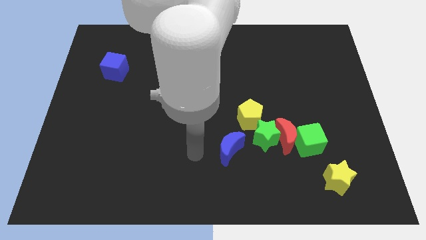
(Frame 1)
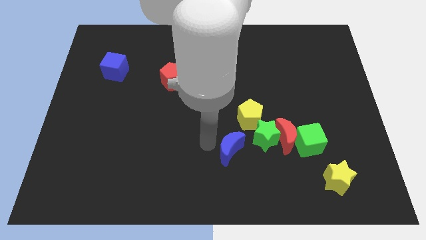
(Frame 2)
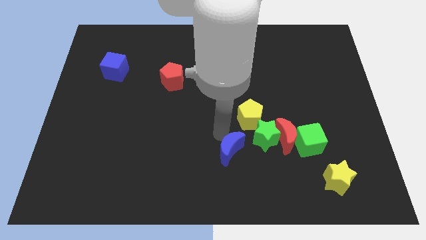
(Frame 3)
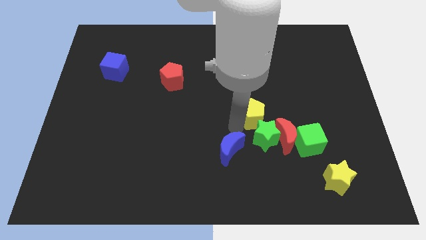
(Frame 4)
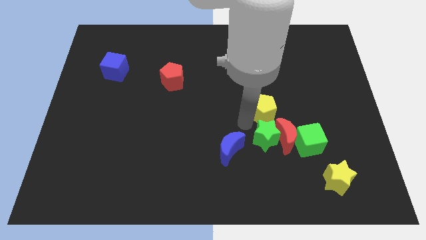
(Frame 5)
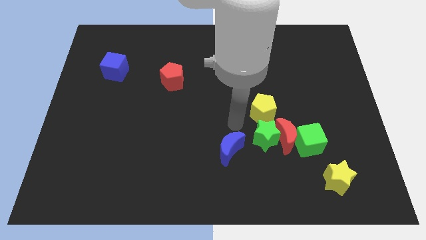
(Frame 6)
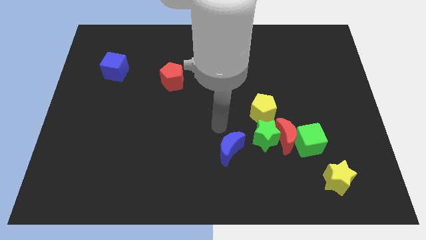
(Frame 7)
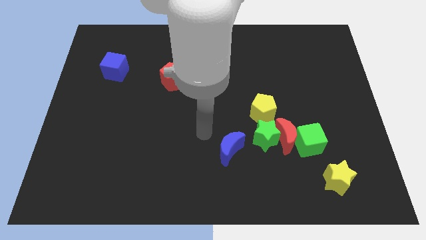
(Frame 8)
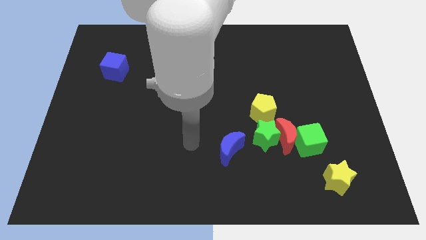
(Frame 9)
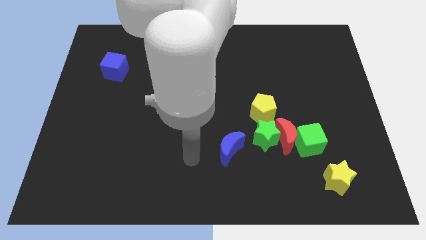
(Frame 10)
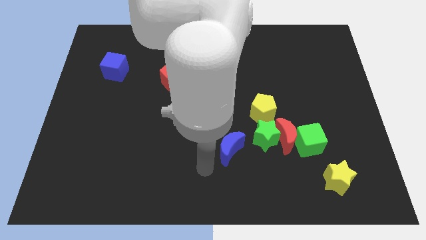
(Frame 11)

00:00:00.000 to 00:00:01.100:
place the yellow pentagon above the green star

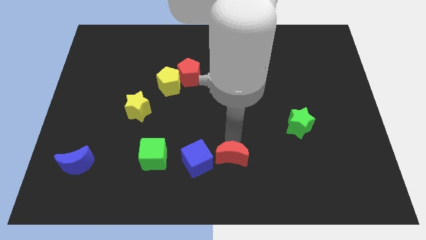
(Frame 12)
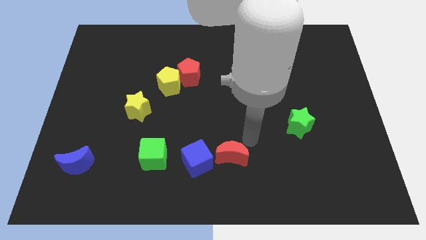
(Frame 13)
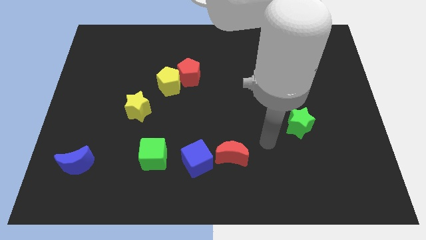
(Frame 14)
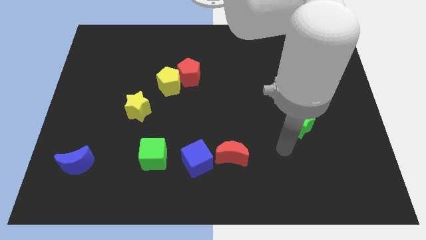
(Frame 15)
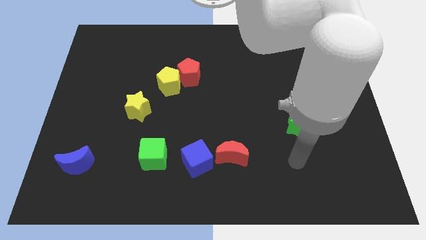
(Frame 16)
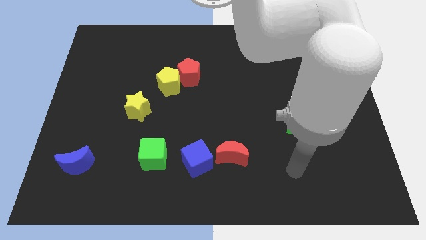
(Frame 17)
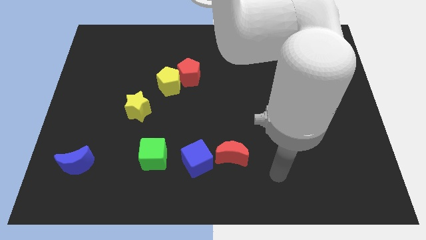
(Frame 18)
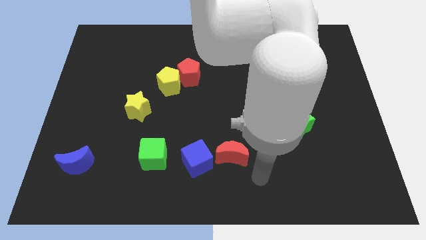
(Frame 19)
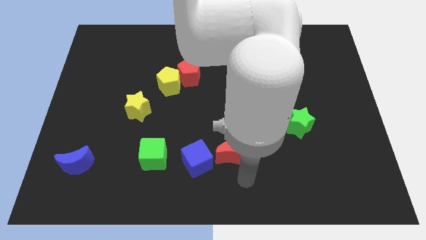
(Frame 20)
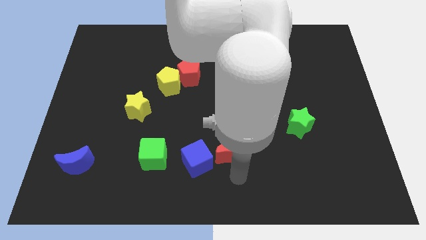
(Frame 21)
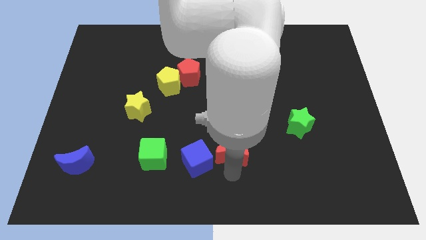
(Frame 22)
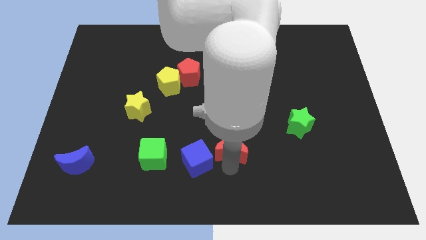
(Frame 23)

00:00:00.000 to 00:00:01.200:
move your arm above to the red crescent

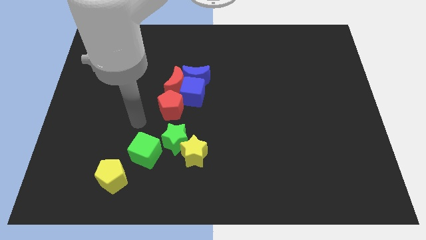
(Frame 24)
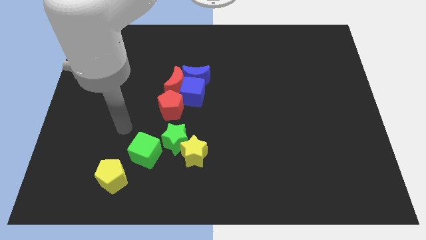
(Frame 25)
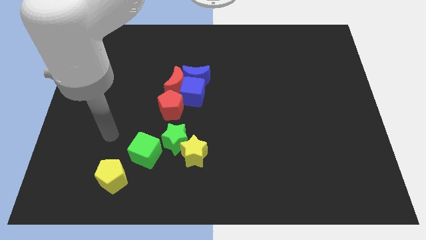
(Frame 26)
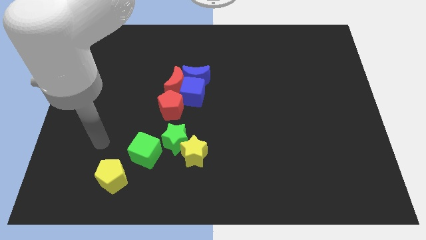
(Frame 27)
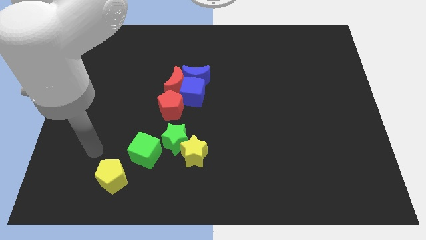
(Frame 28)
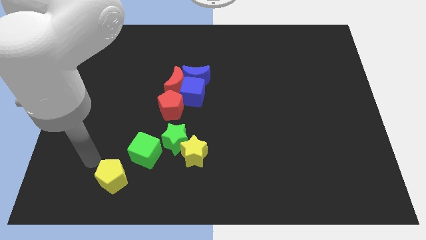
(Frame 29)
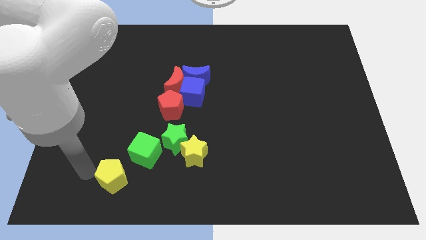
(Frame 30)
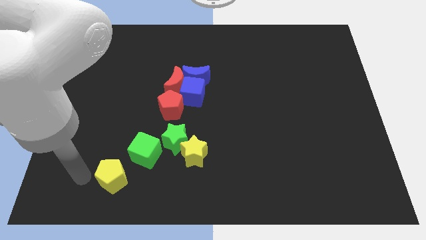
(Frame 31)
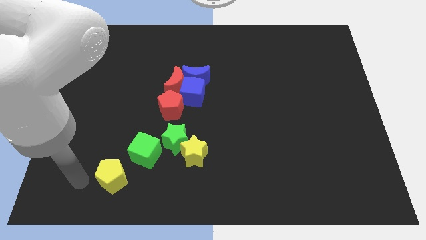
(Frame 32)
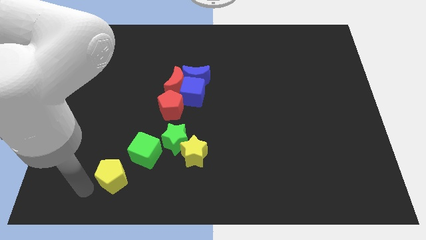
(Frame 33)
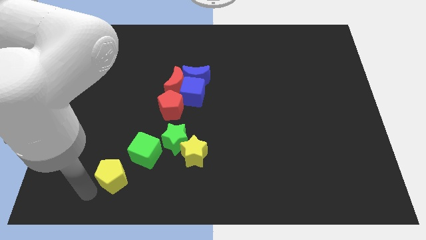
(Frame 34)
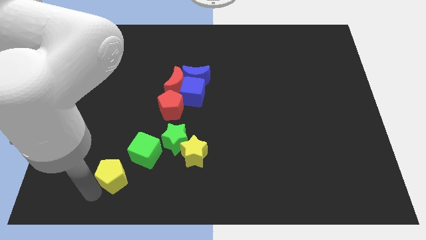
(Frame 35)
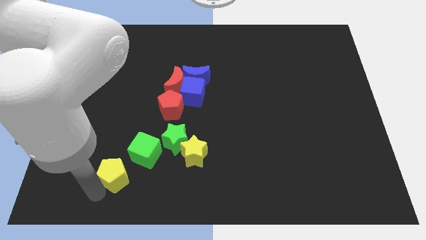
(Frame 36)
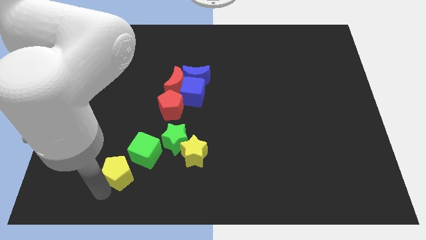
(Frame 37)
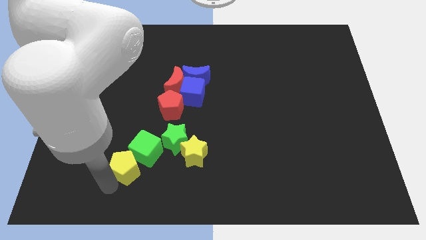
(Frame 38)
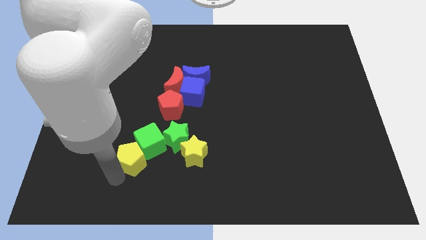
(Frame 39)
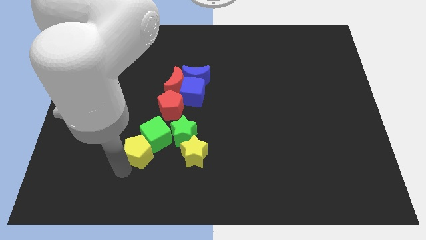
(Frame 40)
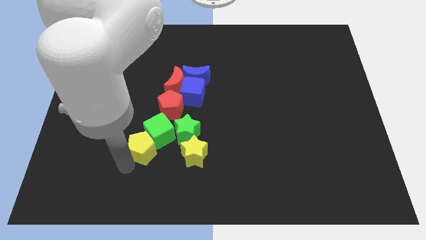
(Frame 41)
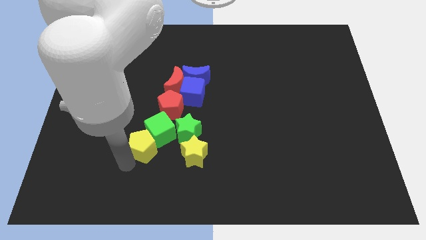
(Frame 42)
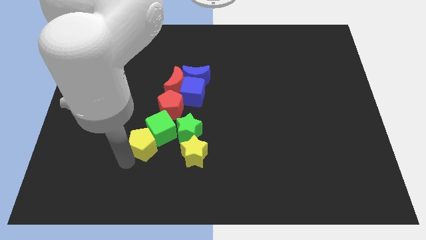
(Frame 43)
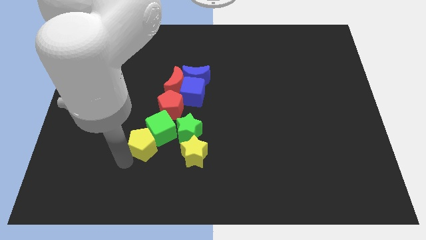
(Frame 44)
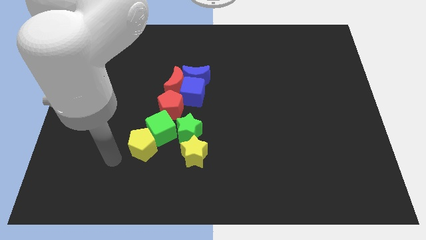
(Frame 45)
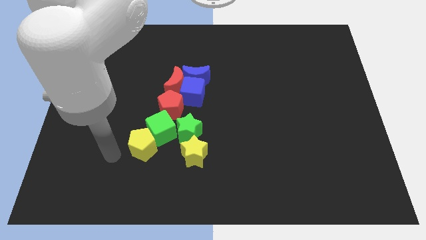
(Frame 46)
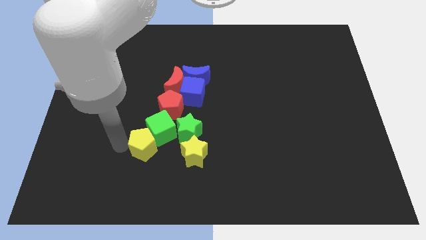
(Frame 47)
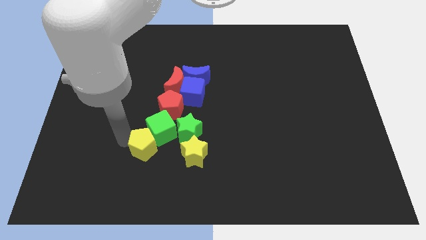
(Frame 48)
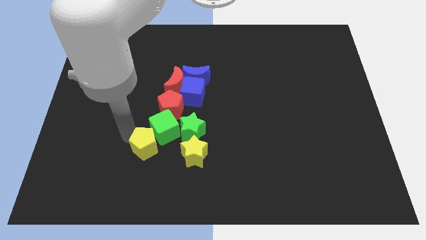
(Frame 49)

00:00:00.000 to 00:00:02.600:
push the yellow pentagon into the green cube

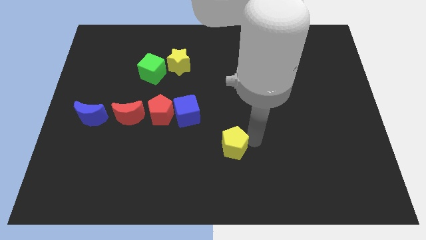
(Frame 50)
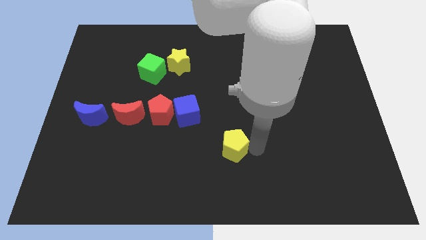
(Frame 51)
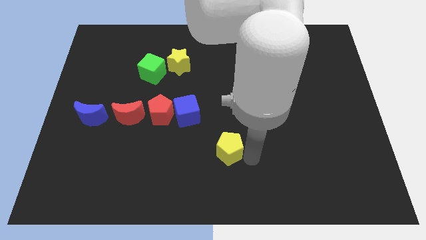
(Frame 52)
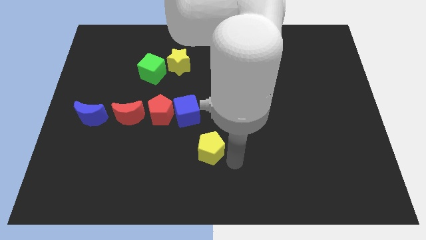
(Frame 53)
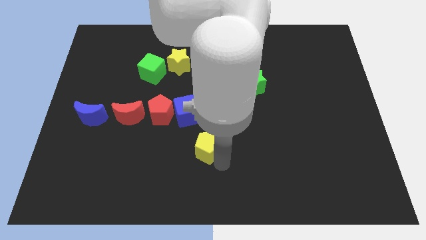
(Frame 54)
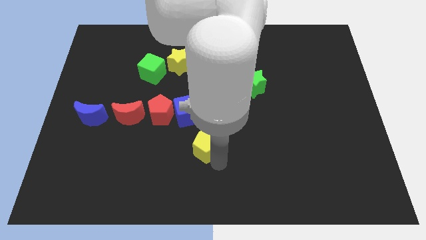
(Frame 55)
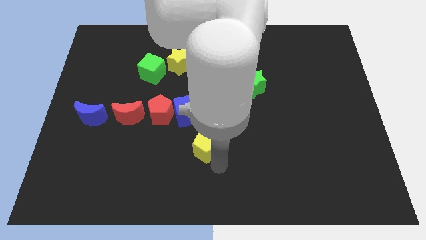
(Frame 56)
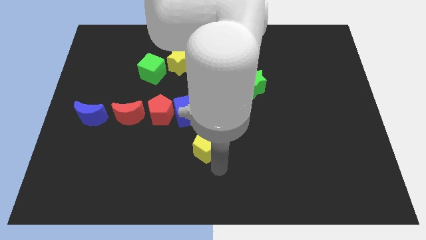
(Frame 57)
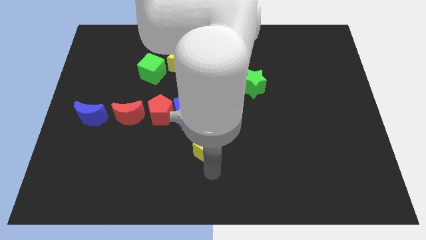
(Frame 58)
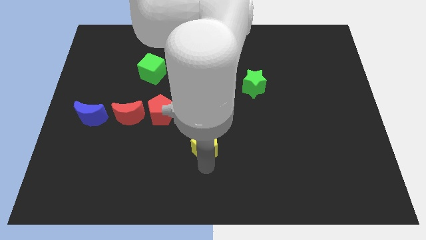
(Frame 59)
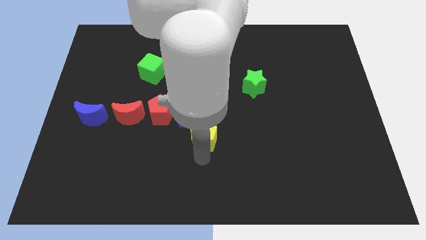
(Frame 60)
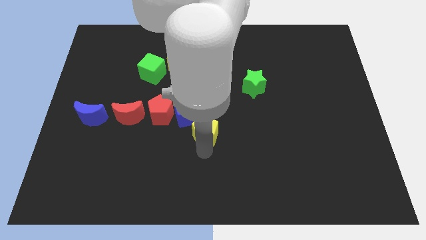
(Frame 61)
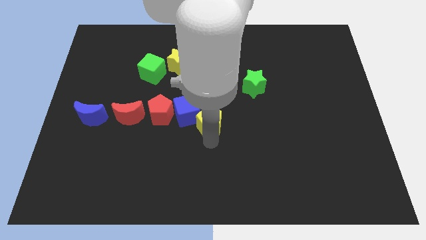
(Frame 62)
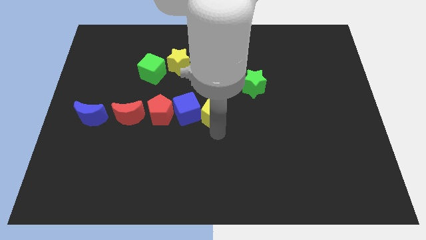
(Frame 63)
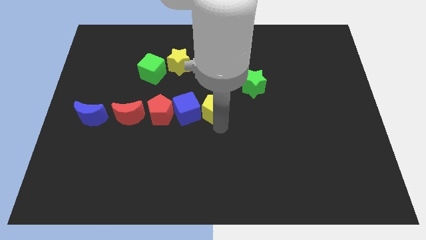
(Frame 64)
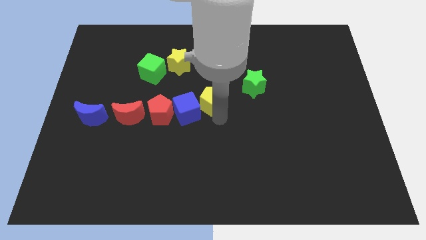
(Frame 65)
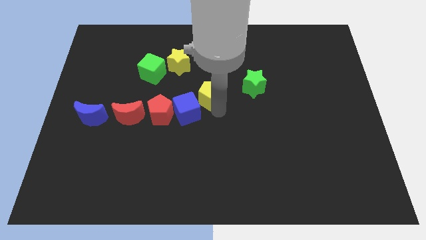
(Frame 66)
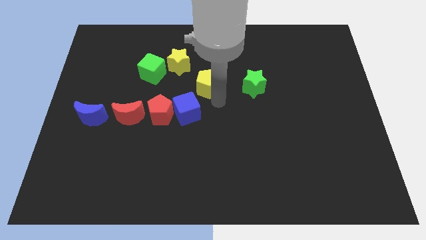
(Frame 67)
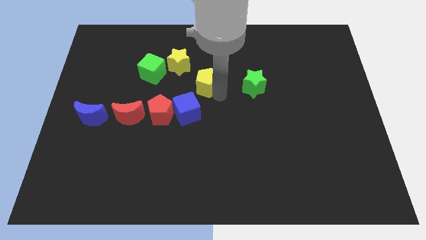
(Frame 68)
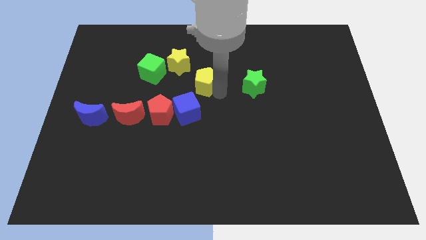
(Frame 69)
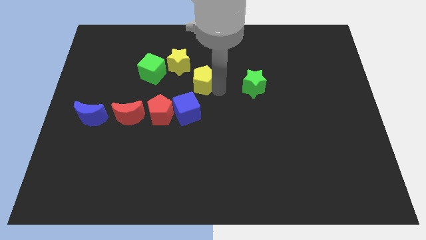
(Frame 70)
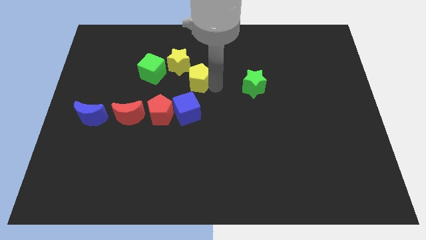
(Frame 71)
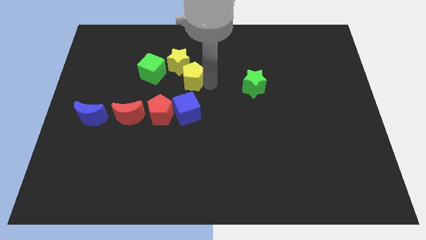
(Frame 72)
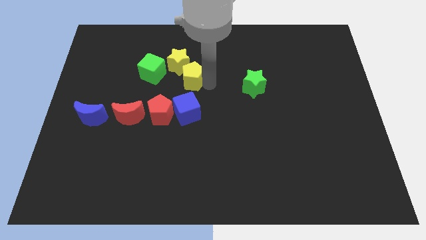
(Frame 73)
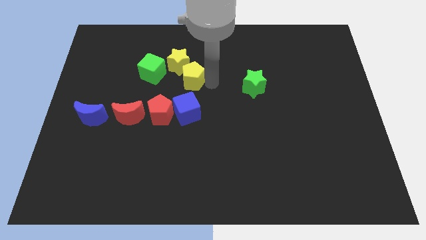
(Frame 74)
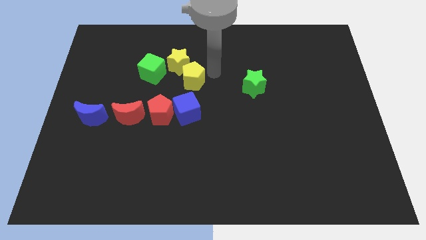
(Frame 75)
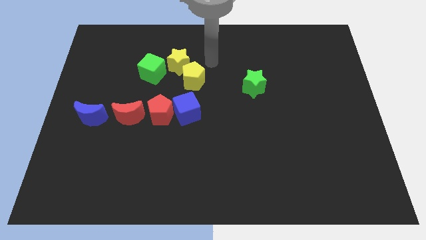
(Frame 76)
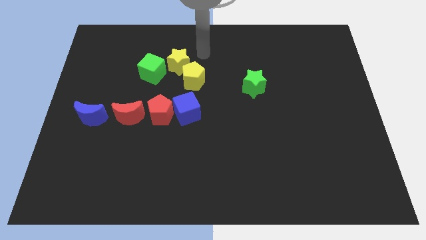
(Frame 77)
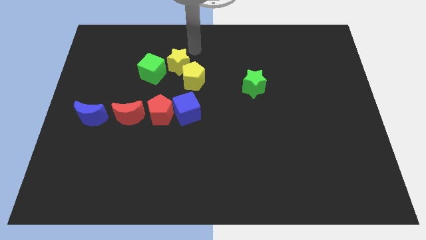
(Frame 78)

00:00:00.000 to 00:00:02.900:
push the yellow pentagon towards the bottom side of the yellow star

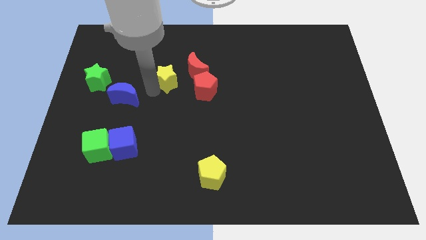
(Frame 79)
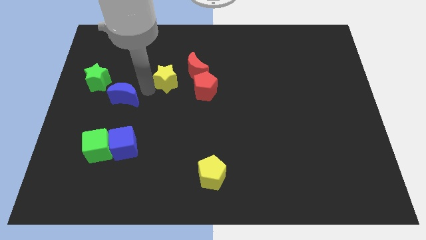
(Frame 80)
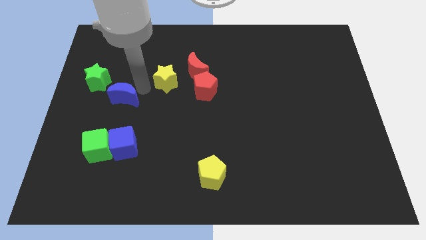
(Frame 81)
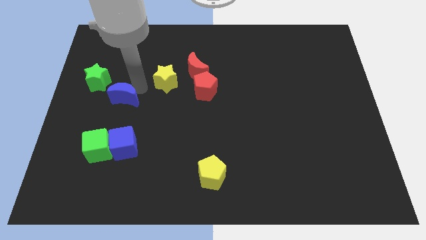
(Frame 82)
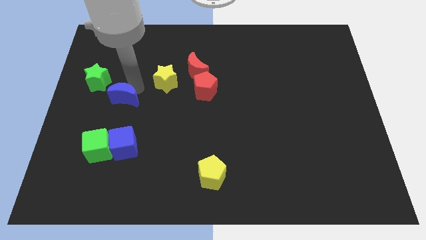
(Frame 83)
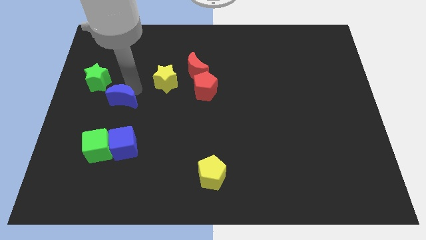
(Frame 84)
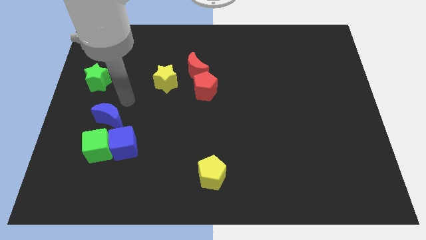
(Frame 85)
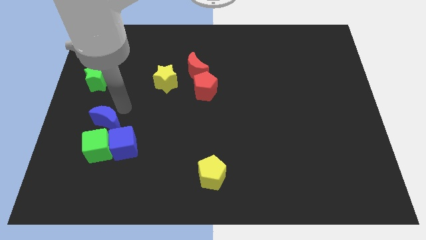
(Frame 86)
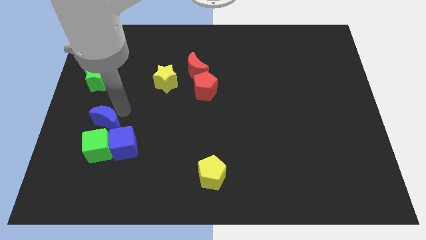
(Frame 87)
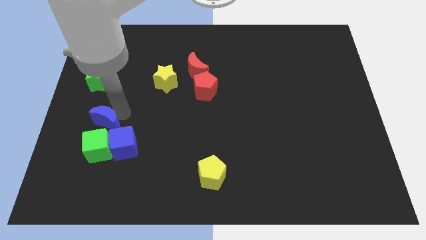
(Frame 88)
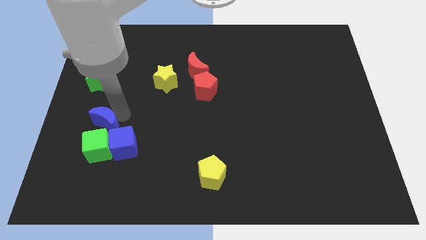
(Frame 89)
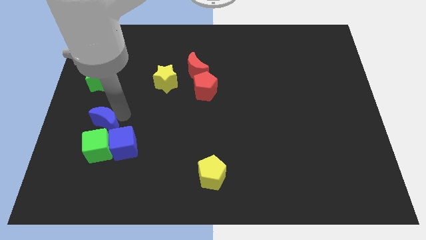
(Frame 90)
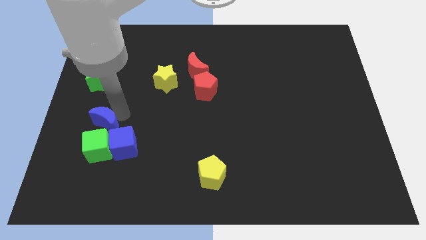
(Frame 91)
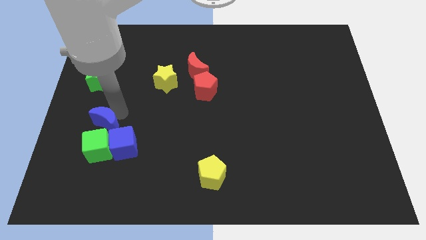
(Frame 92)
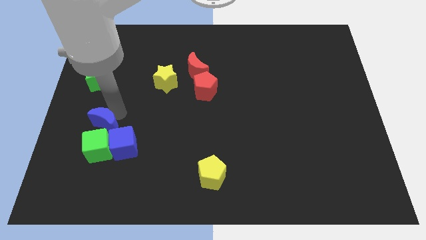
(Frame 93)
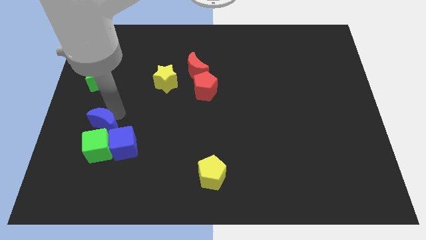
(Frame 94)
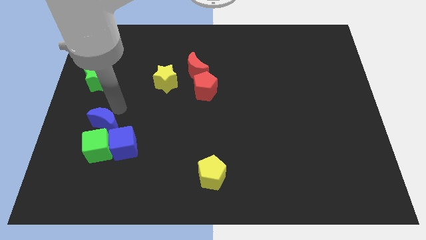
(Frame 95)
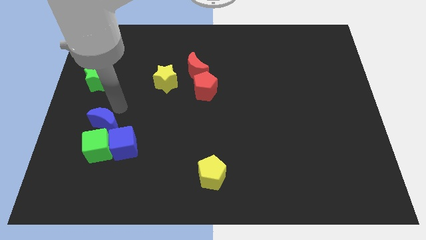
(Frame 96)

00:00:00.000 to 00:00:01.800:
move the blue moon near blue cube
